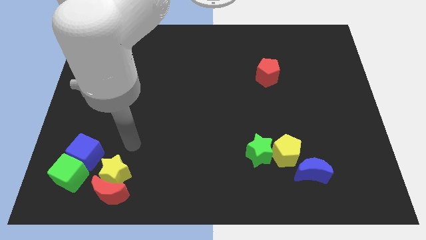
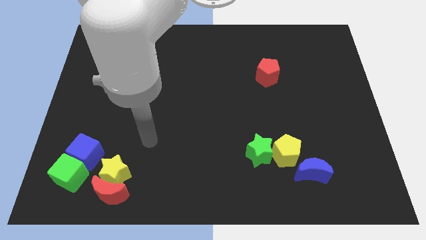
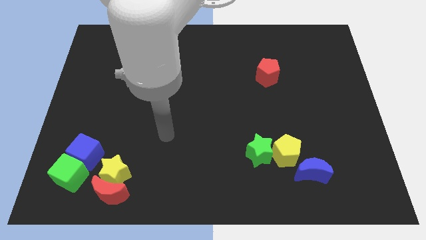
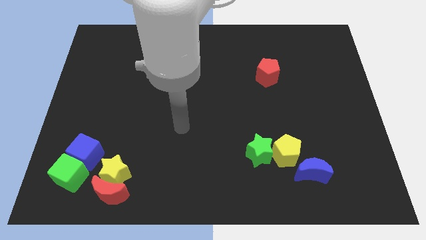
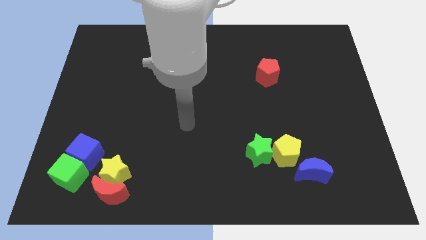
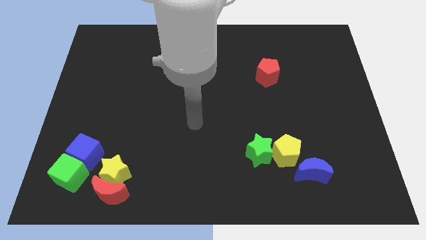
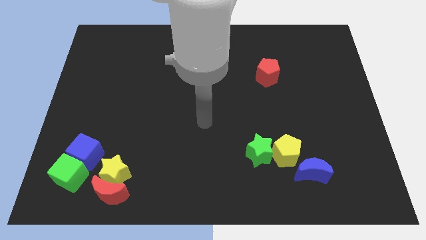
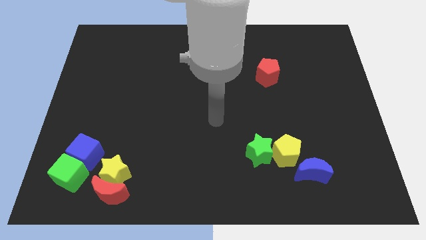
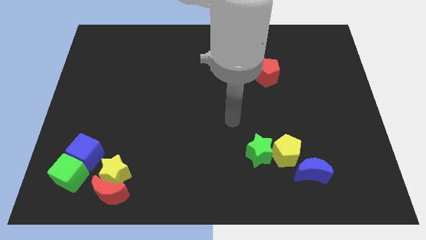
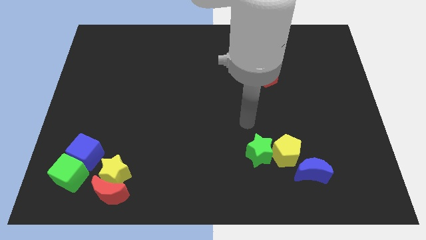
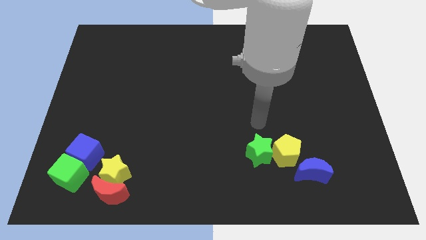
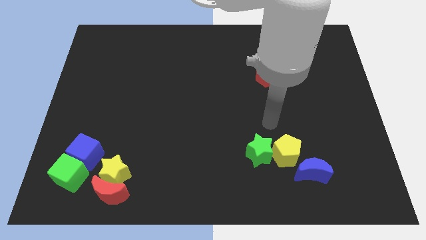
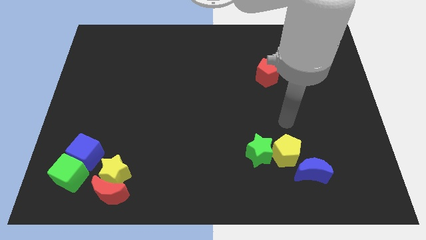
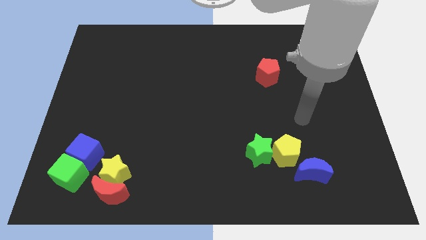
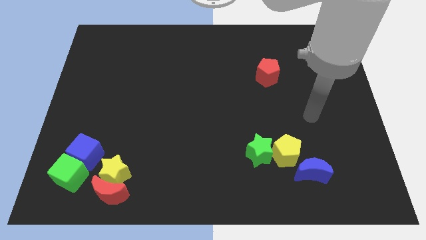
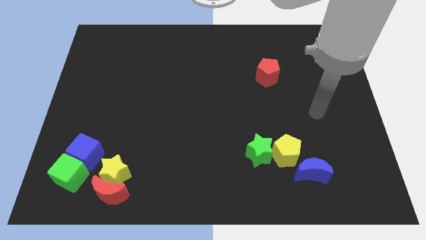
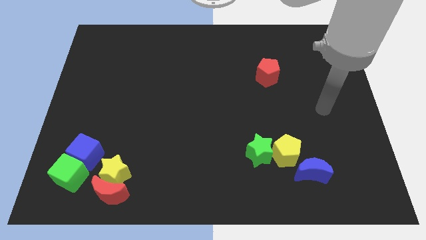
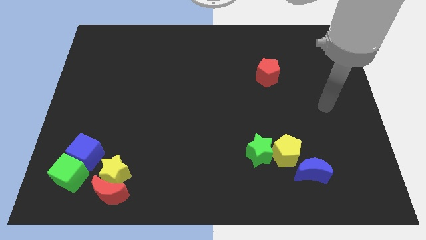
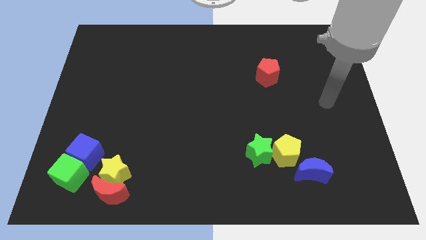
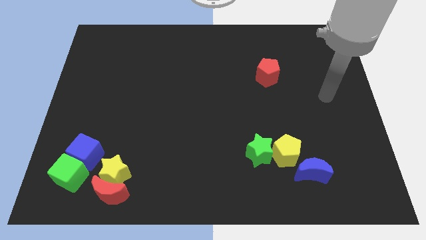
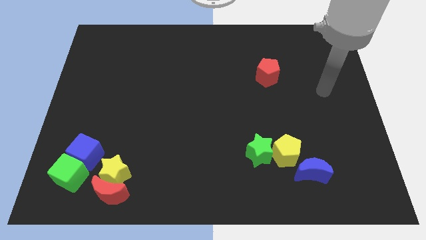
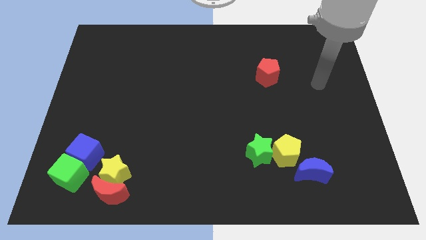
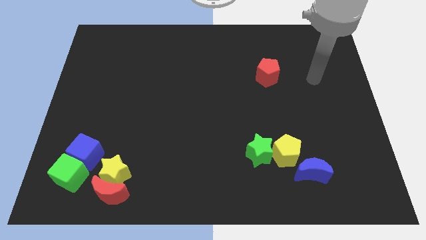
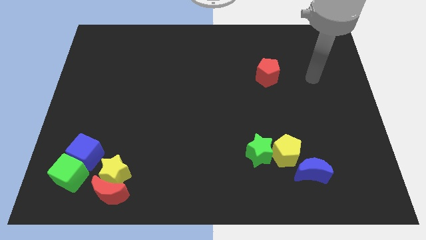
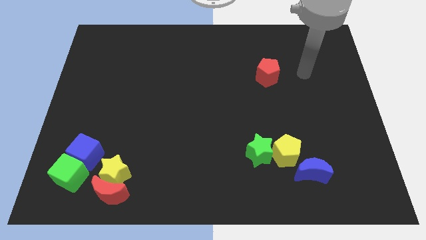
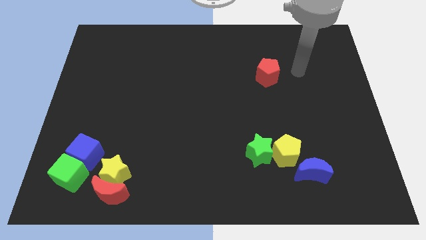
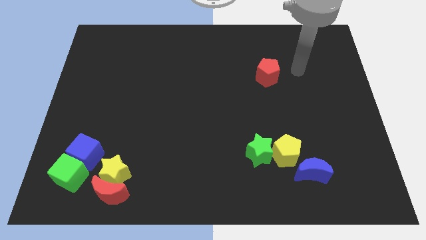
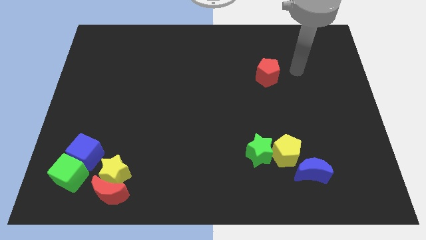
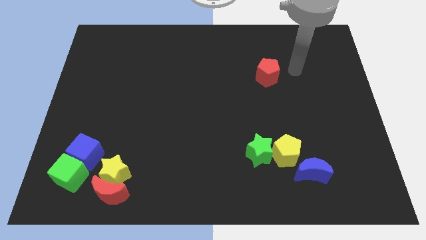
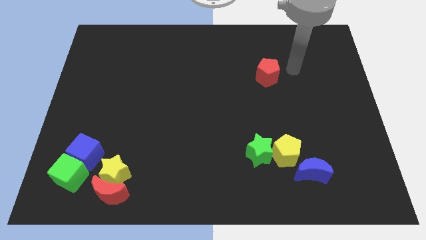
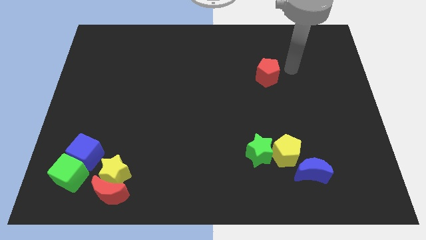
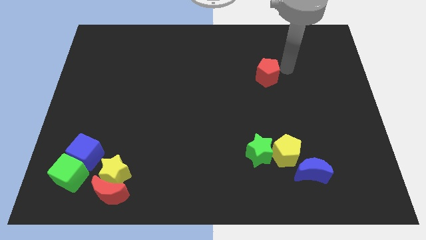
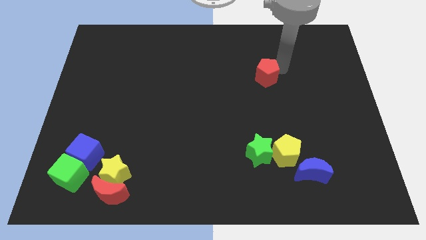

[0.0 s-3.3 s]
point your arm at the right of the red pentagon

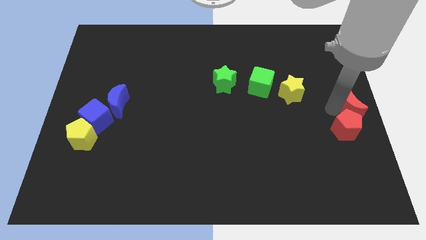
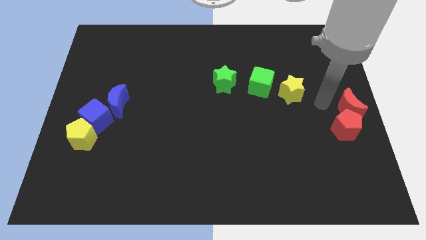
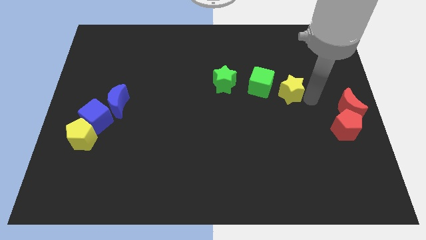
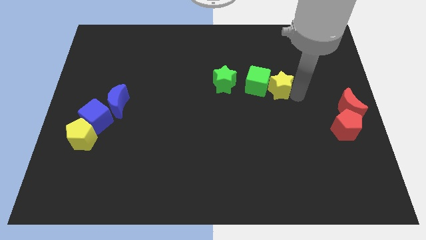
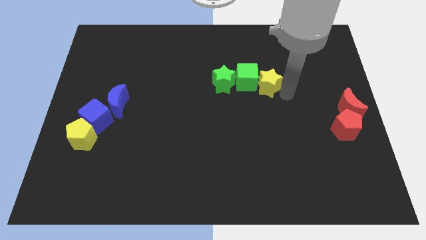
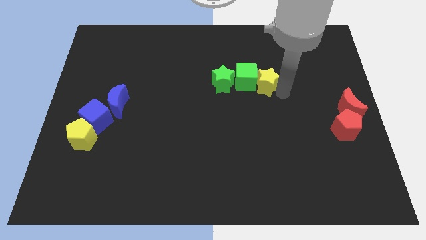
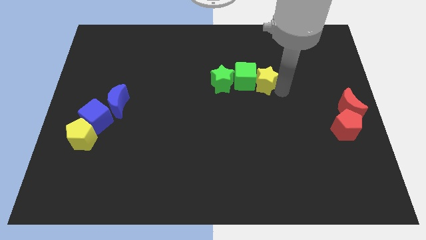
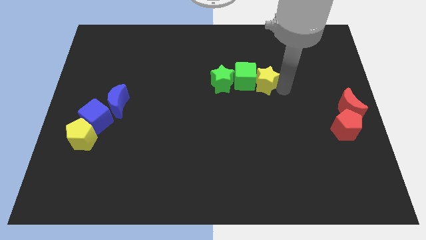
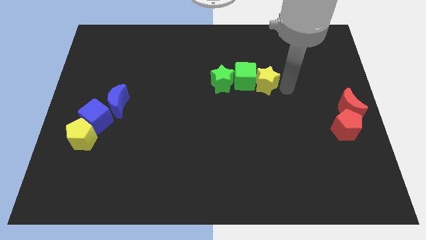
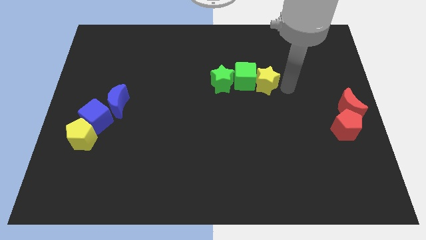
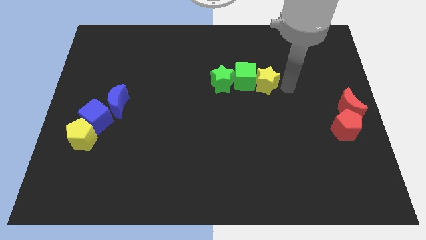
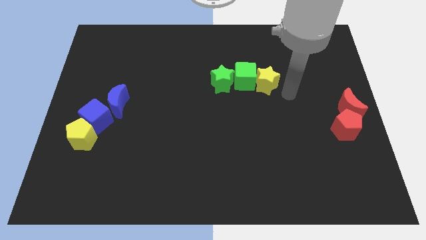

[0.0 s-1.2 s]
push the yellow star to the right side of the green cube

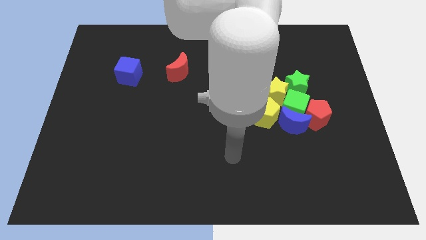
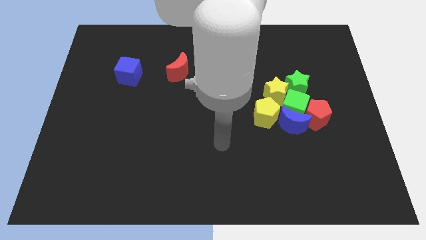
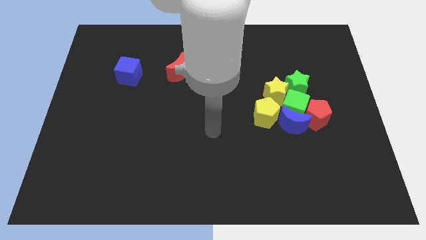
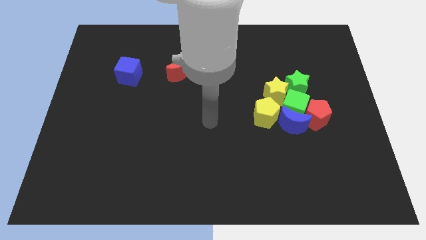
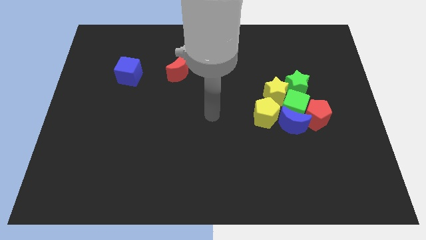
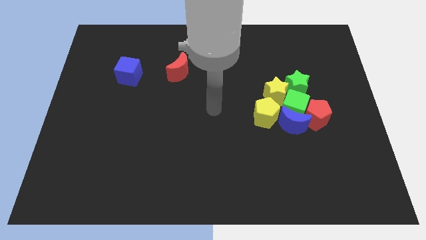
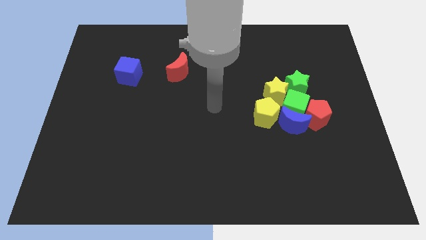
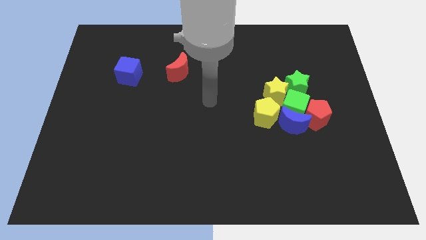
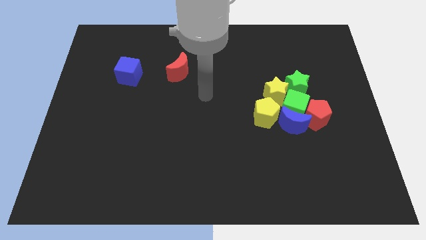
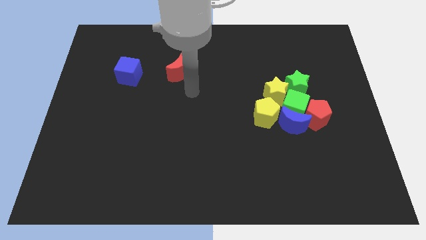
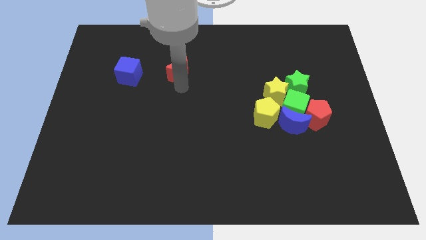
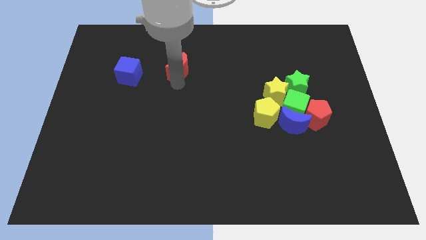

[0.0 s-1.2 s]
move the arm down to the red moon

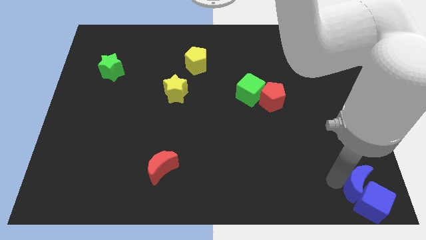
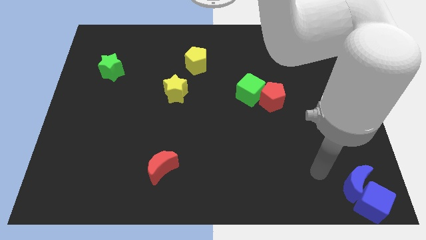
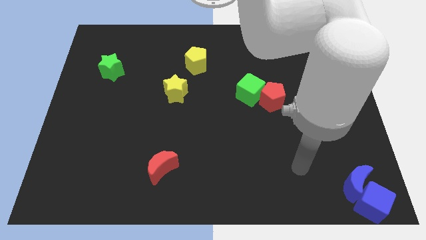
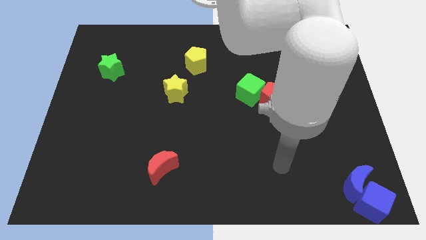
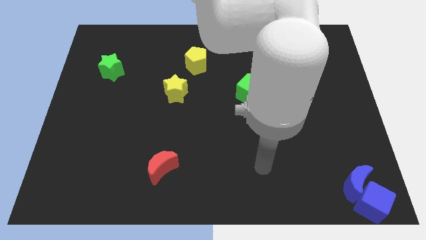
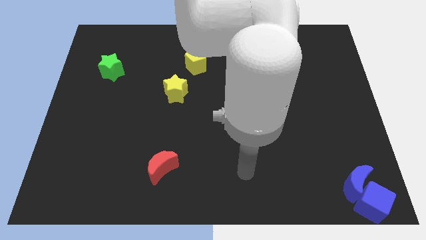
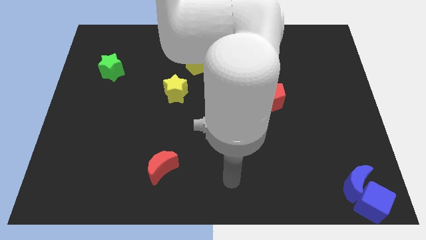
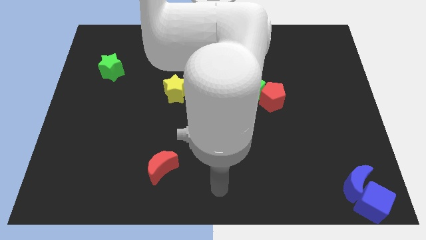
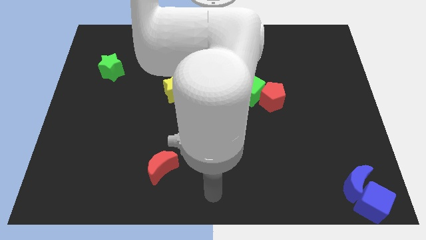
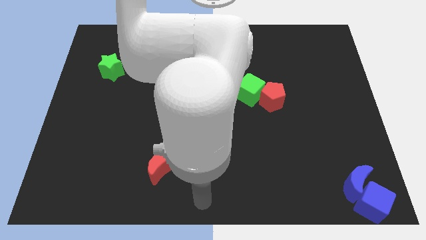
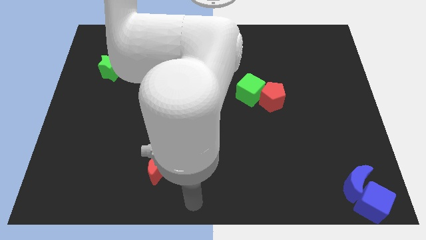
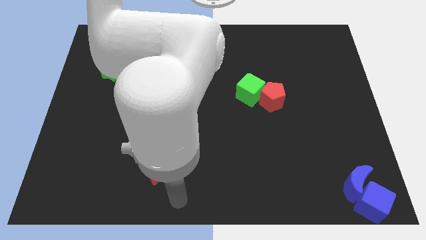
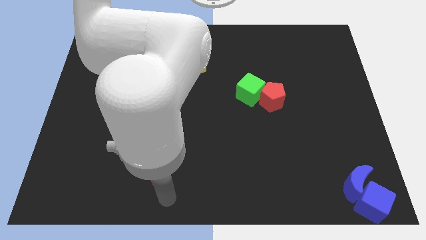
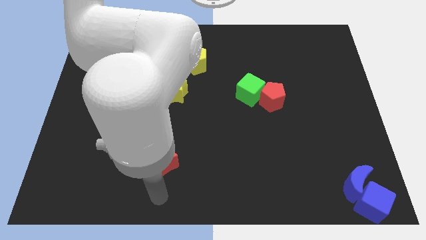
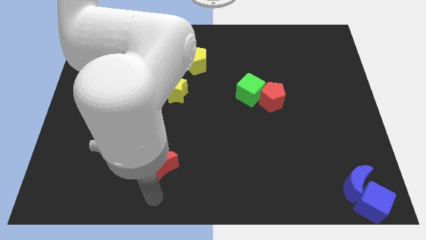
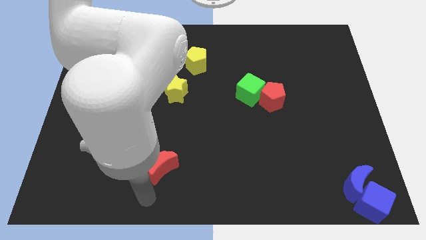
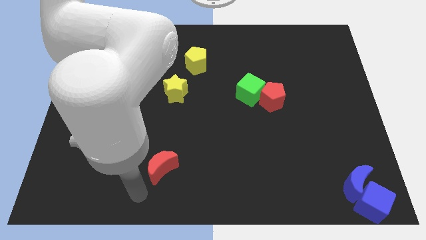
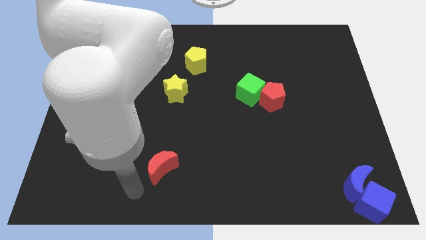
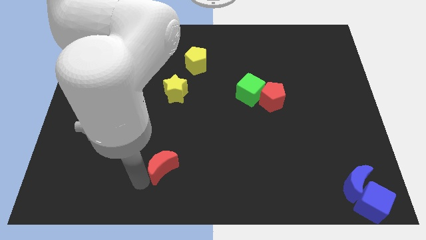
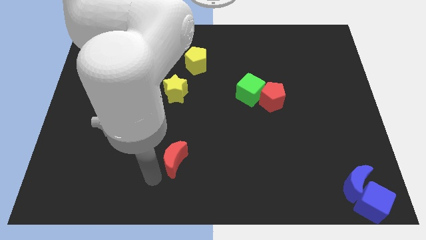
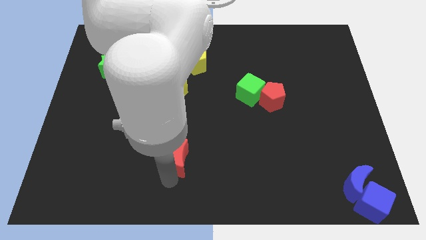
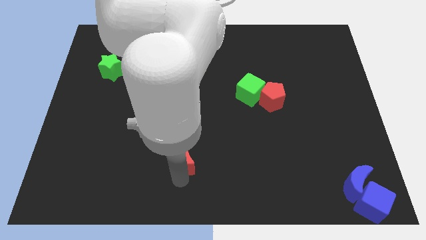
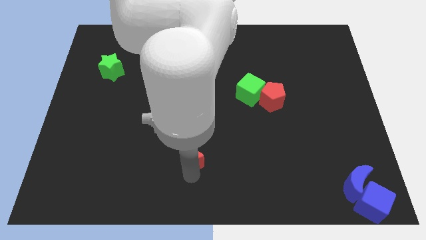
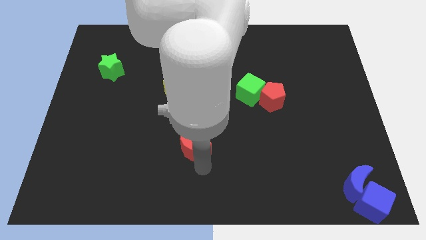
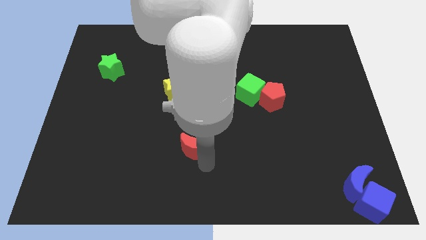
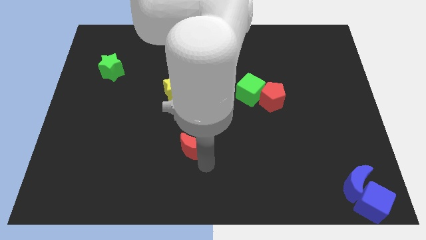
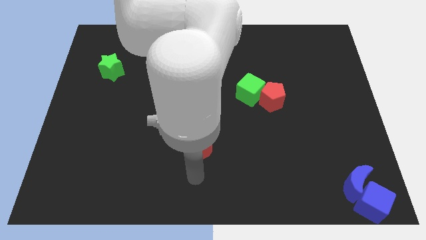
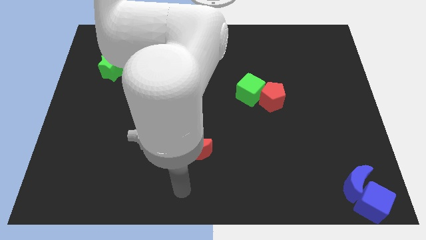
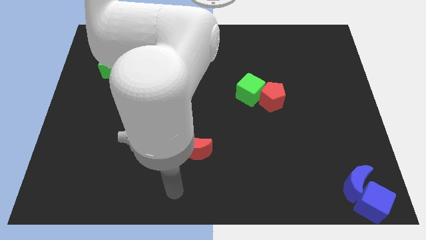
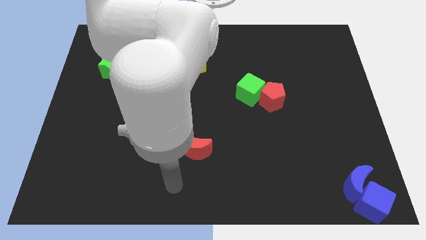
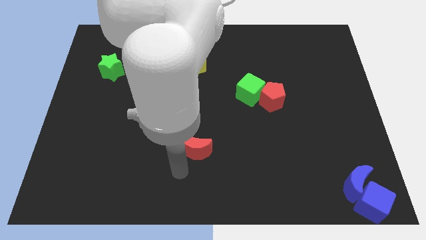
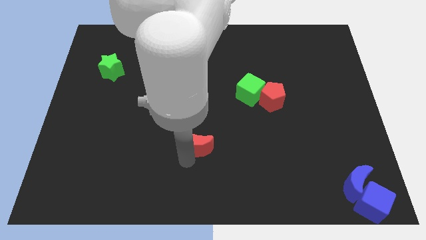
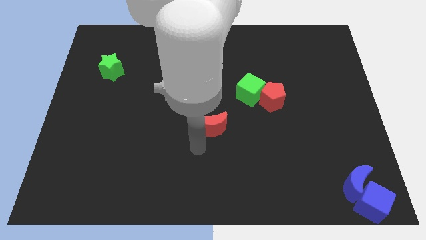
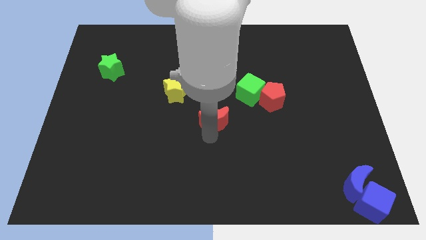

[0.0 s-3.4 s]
place the red moon below the green cube
